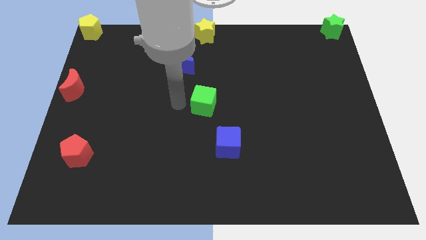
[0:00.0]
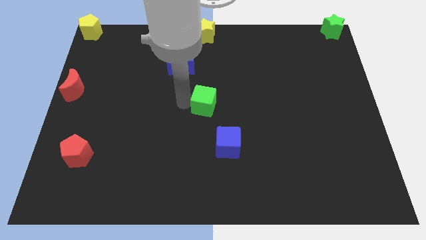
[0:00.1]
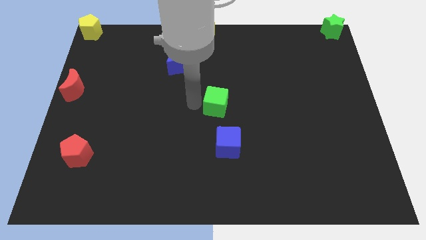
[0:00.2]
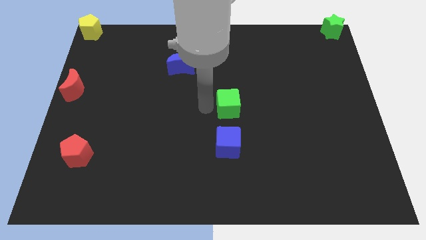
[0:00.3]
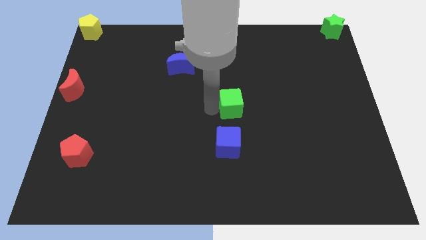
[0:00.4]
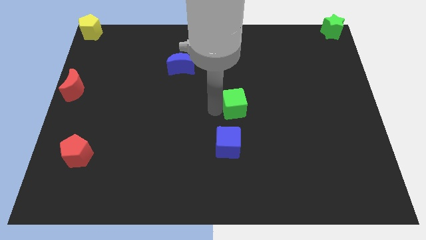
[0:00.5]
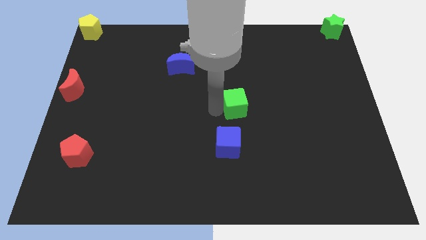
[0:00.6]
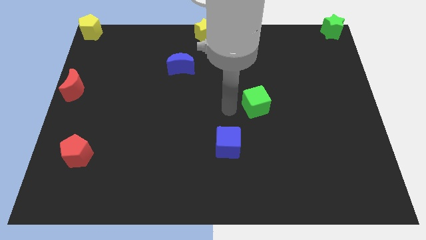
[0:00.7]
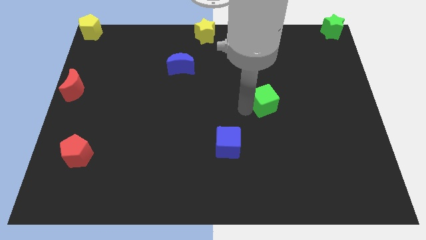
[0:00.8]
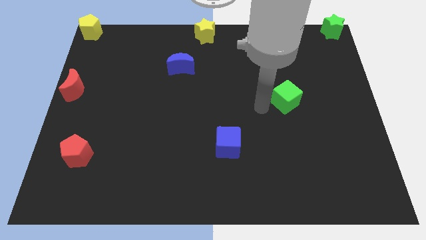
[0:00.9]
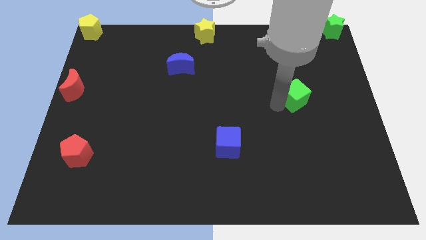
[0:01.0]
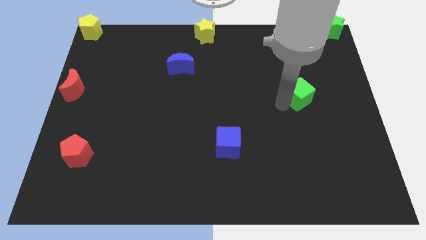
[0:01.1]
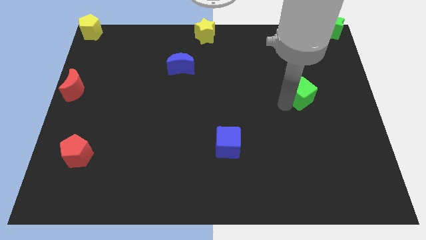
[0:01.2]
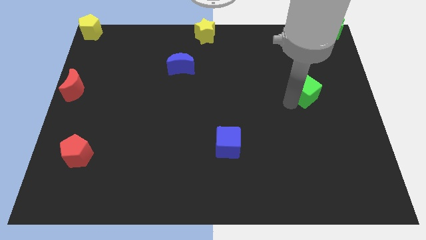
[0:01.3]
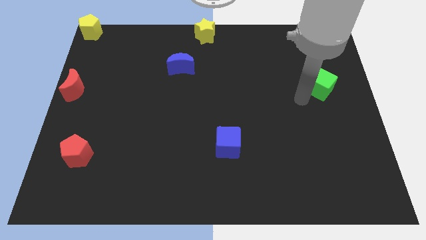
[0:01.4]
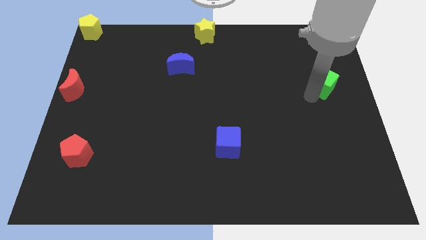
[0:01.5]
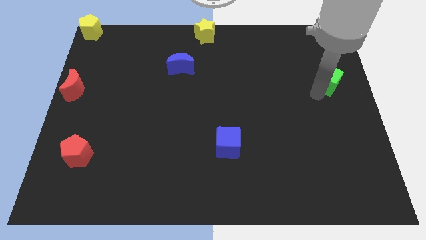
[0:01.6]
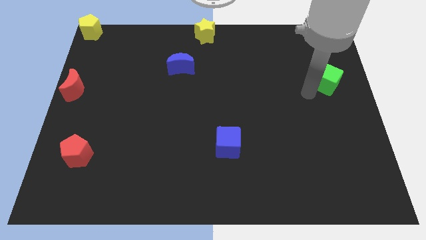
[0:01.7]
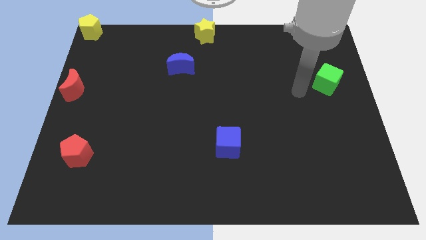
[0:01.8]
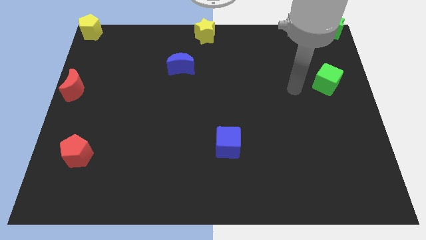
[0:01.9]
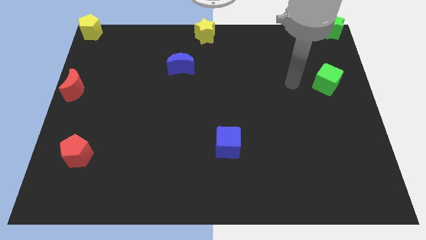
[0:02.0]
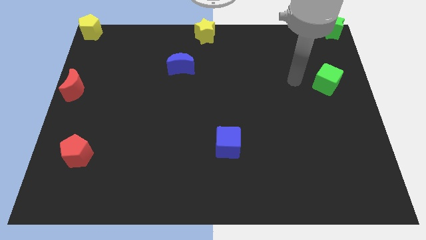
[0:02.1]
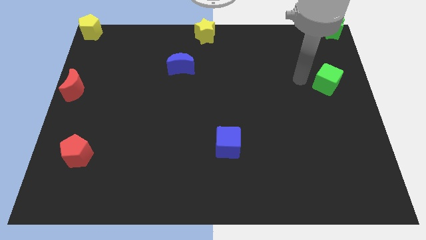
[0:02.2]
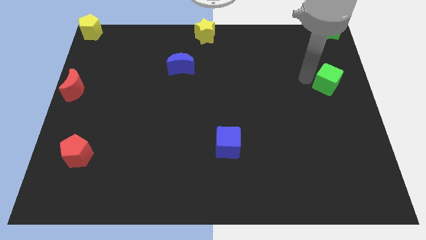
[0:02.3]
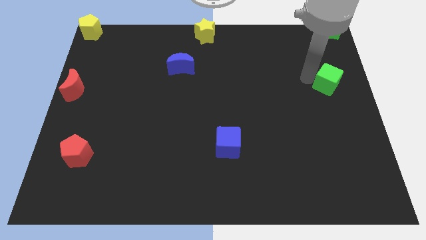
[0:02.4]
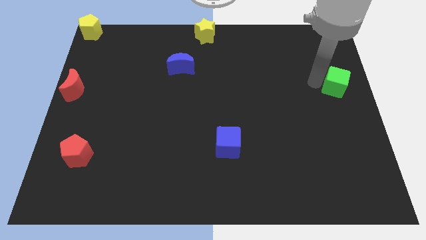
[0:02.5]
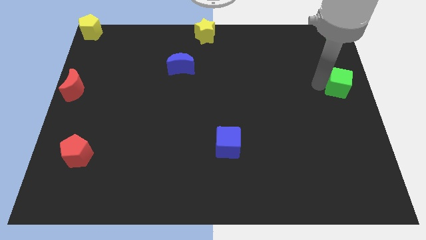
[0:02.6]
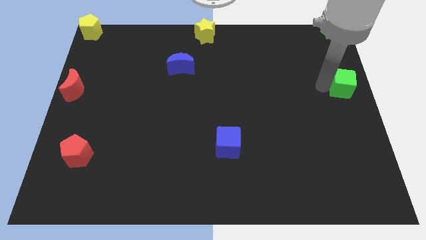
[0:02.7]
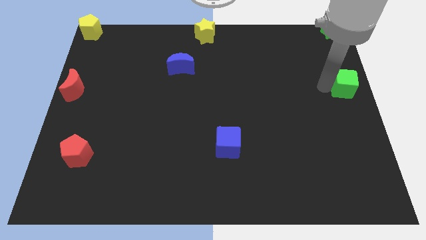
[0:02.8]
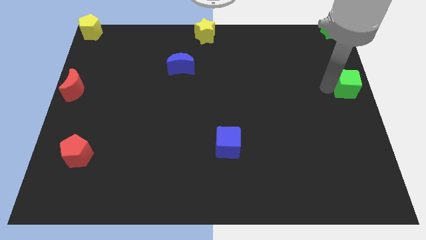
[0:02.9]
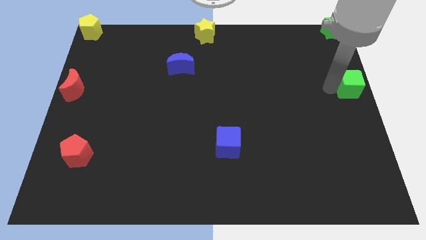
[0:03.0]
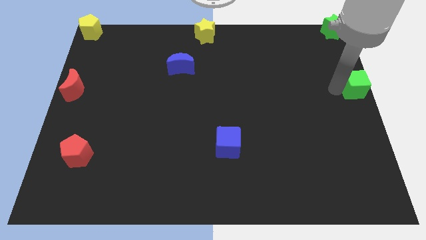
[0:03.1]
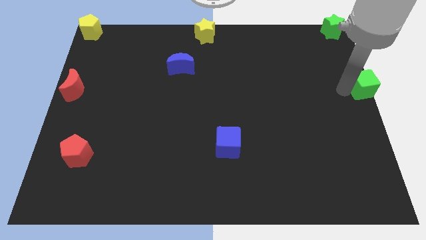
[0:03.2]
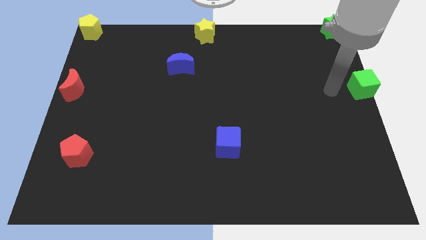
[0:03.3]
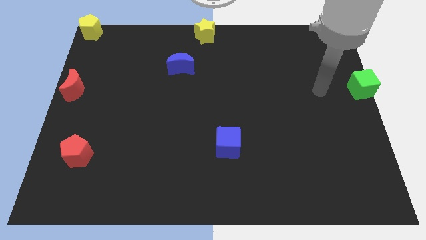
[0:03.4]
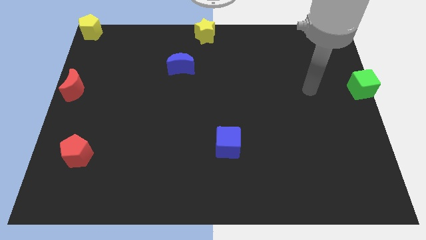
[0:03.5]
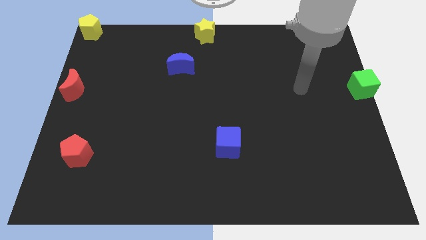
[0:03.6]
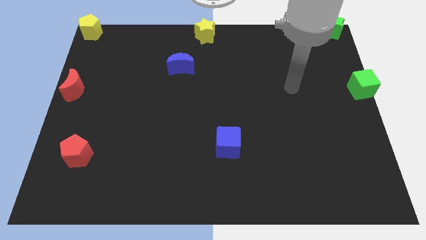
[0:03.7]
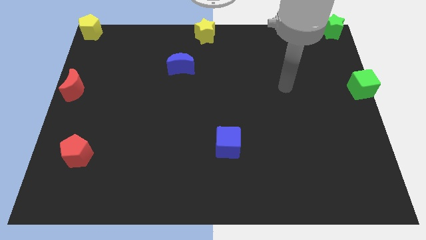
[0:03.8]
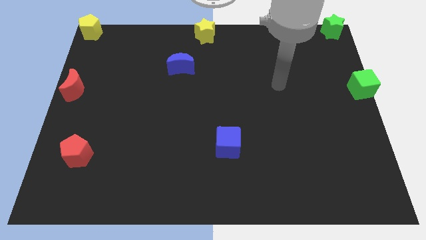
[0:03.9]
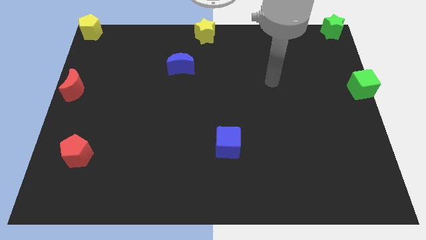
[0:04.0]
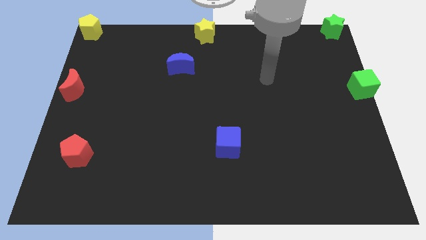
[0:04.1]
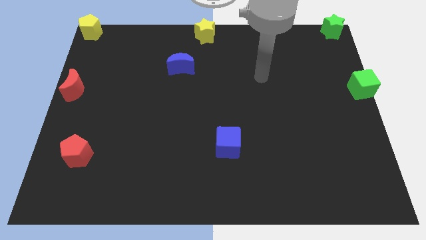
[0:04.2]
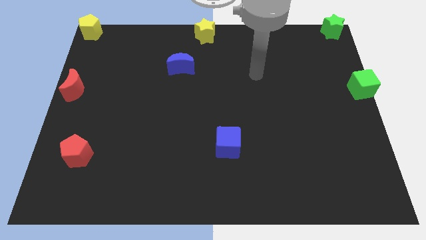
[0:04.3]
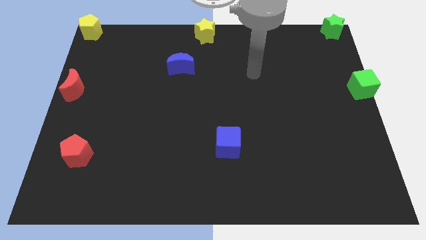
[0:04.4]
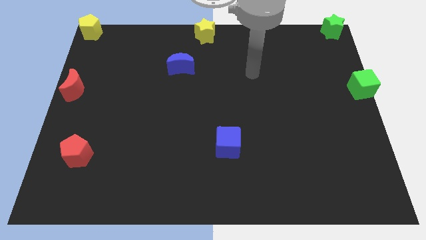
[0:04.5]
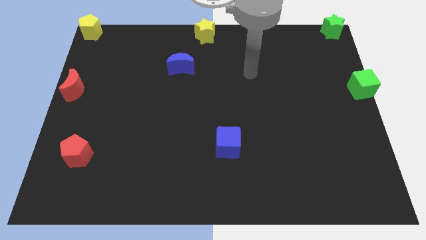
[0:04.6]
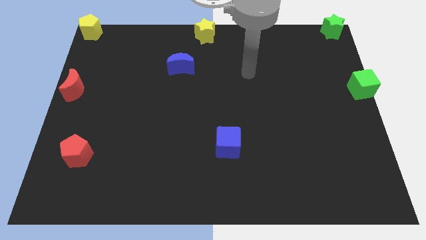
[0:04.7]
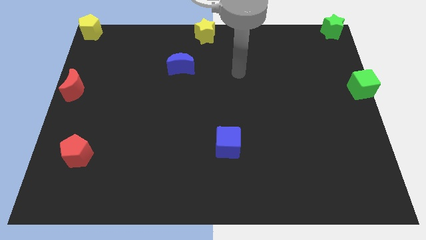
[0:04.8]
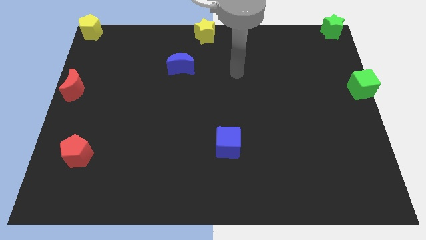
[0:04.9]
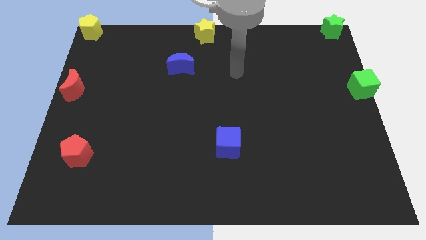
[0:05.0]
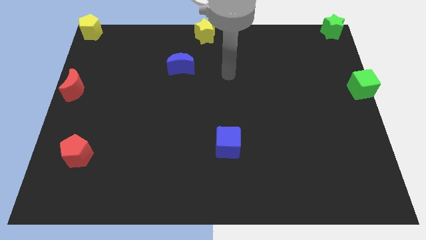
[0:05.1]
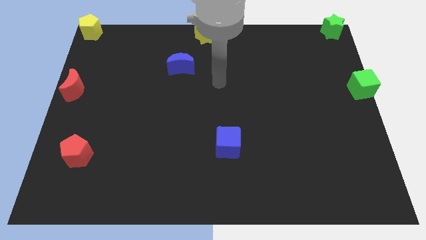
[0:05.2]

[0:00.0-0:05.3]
push the green cube to the center right of the board

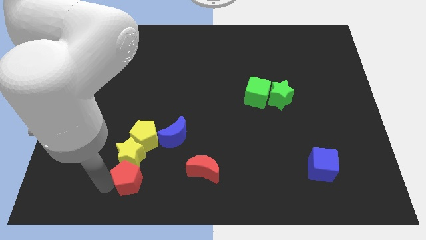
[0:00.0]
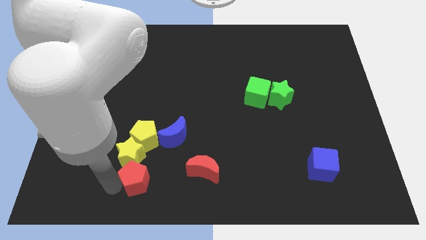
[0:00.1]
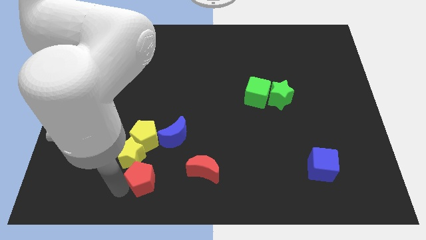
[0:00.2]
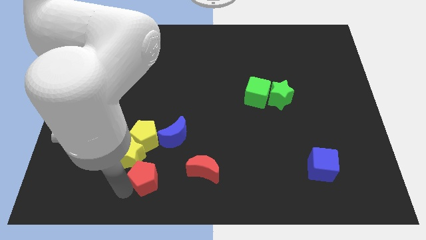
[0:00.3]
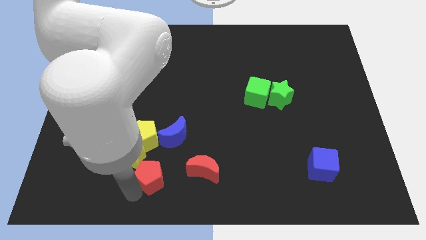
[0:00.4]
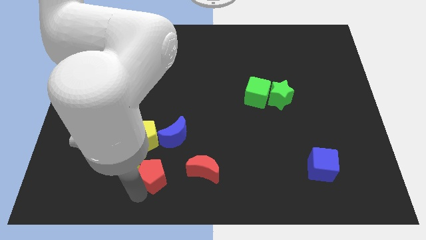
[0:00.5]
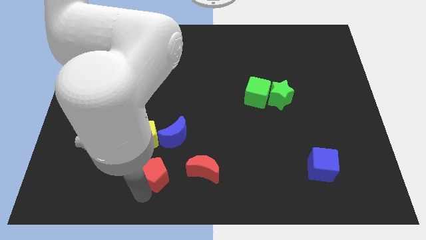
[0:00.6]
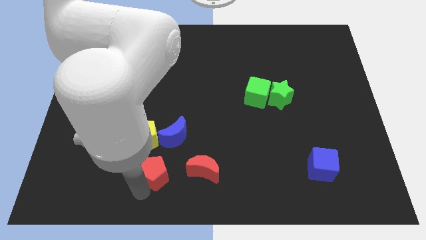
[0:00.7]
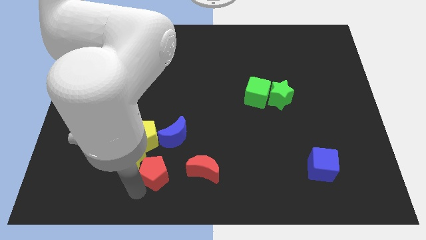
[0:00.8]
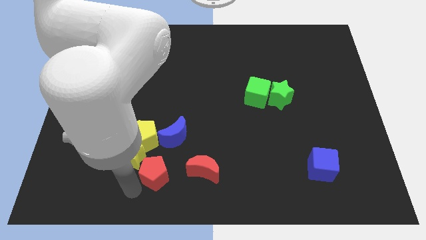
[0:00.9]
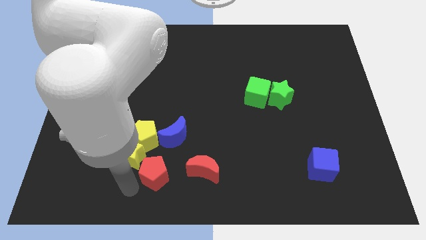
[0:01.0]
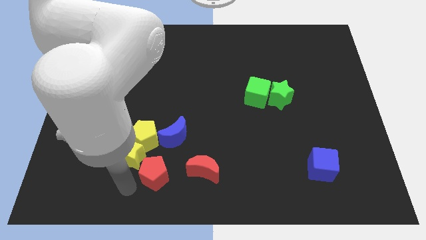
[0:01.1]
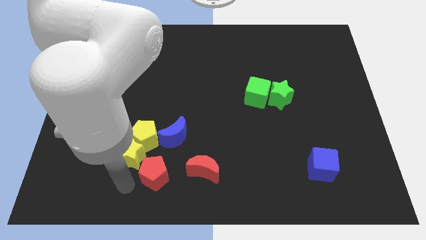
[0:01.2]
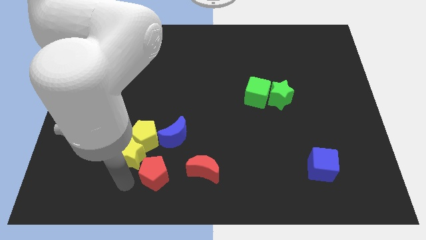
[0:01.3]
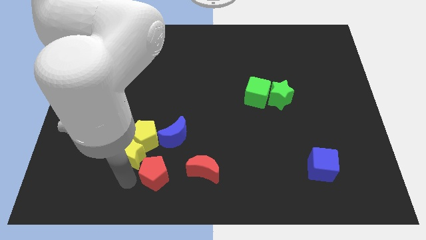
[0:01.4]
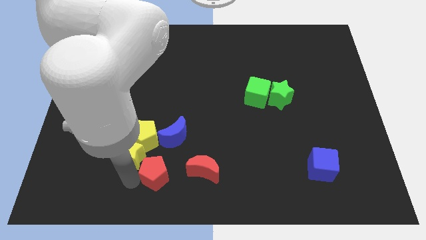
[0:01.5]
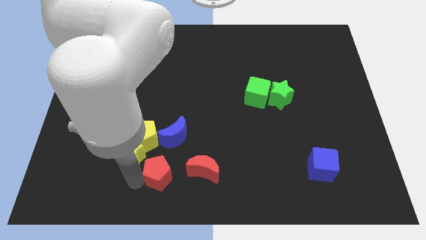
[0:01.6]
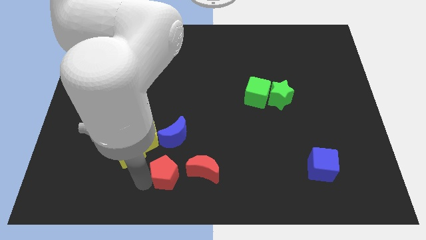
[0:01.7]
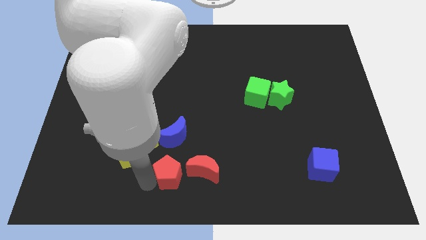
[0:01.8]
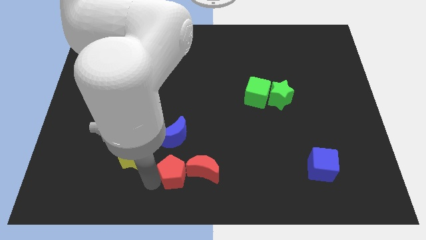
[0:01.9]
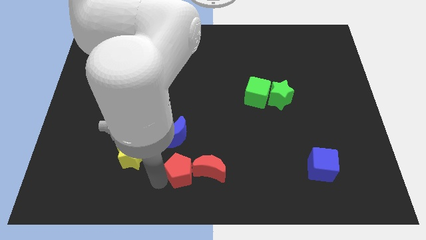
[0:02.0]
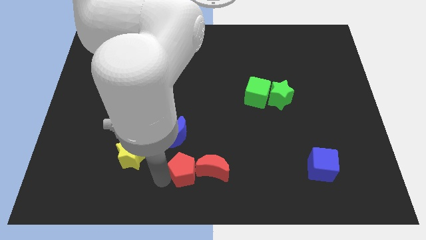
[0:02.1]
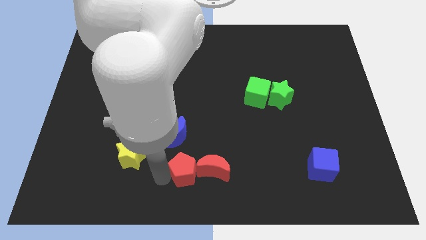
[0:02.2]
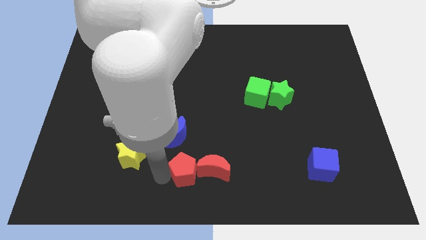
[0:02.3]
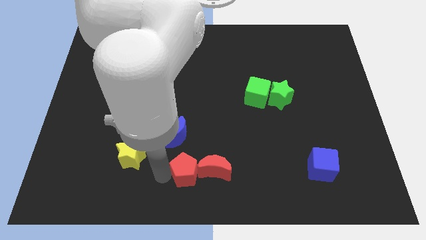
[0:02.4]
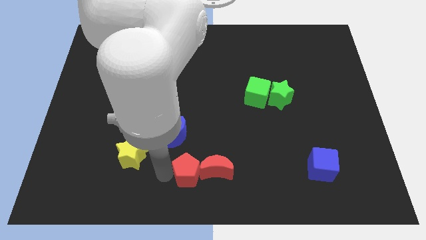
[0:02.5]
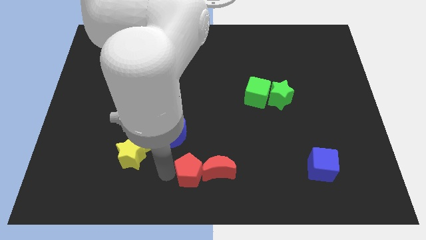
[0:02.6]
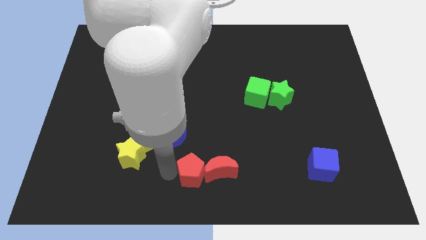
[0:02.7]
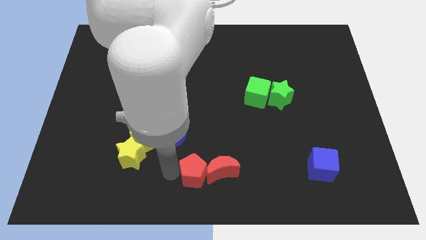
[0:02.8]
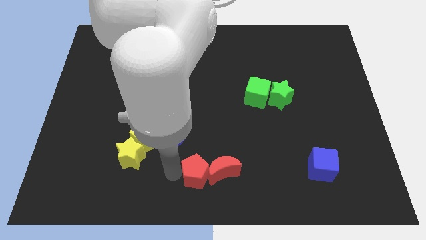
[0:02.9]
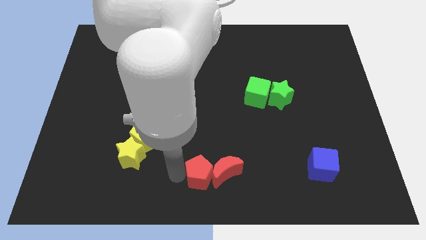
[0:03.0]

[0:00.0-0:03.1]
push the red pentagon into the red moon

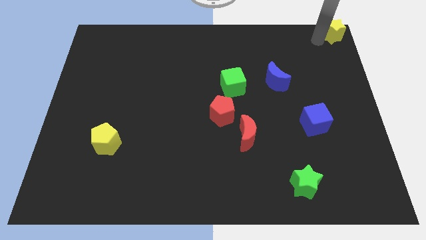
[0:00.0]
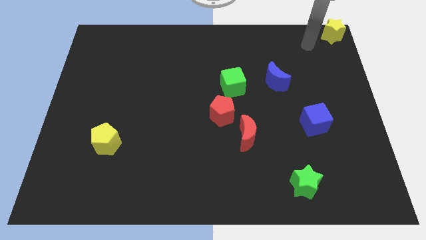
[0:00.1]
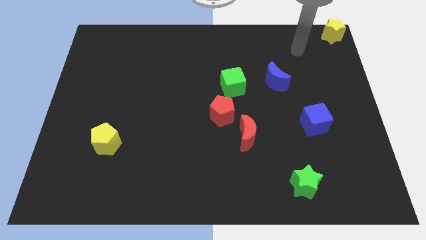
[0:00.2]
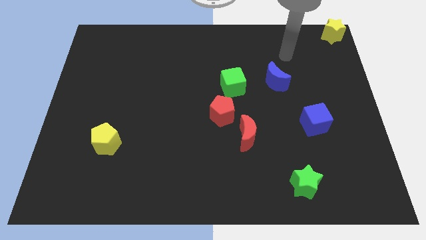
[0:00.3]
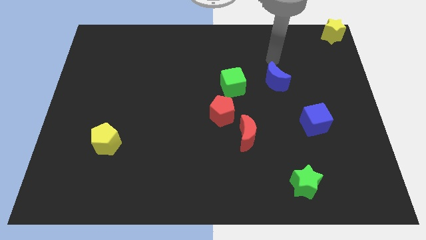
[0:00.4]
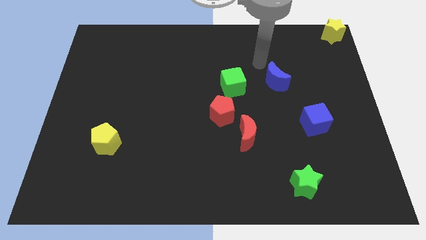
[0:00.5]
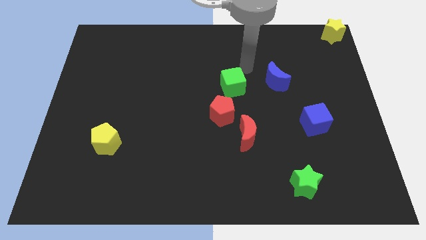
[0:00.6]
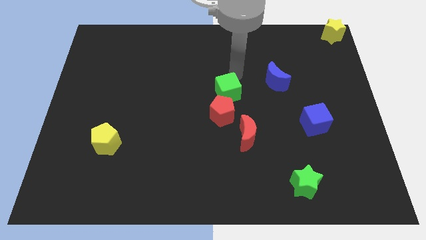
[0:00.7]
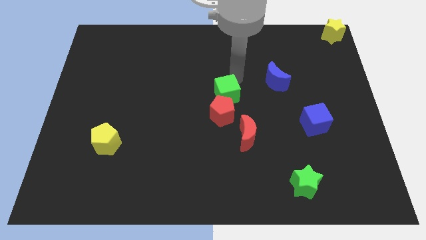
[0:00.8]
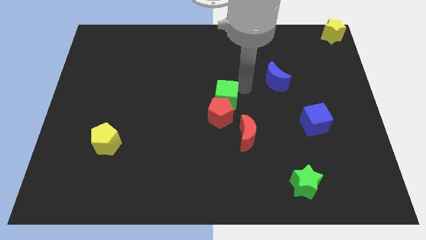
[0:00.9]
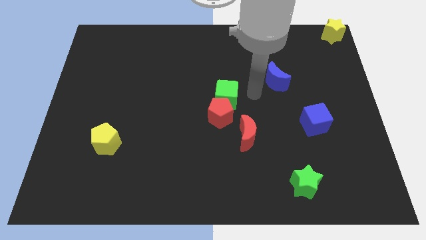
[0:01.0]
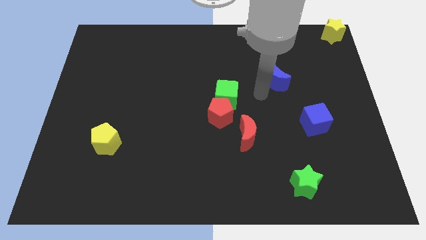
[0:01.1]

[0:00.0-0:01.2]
move green cube into the red pentagon
